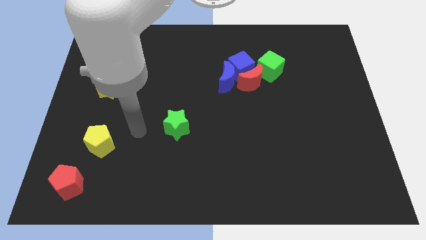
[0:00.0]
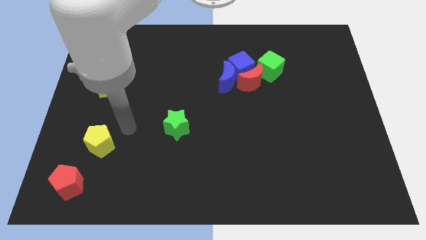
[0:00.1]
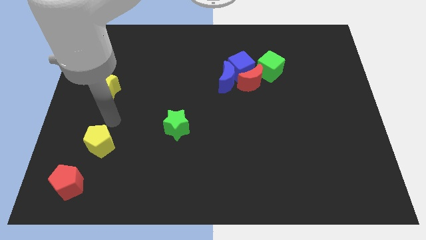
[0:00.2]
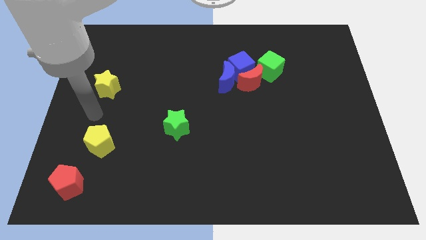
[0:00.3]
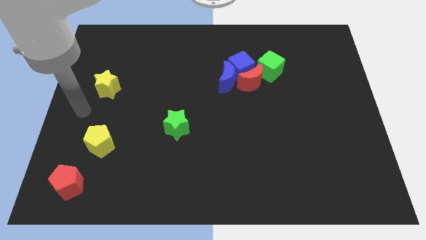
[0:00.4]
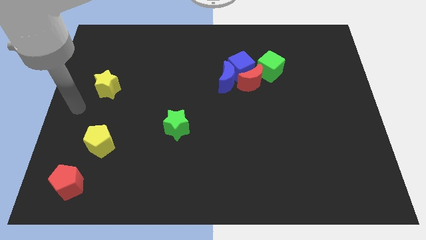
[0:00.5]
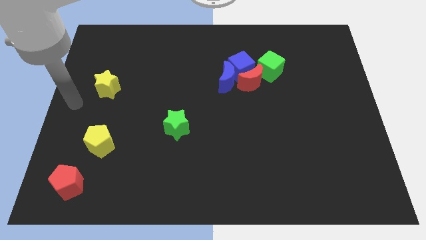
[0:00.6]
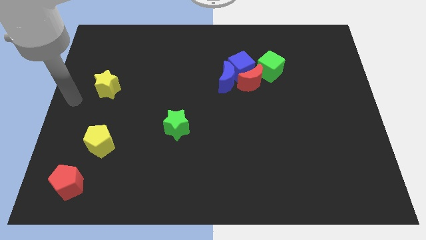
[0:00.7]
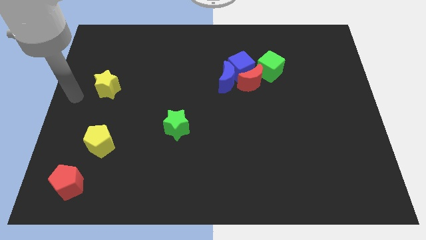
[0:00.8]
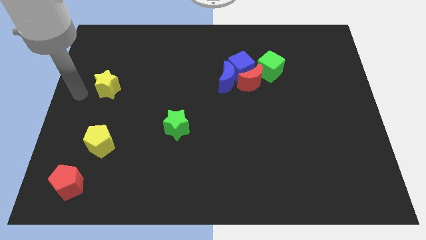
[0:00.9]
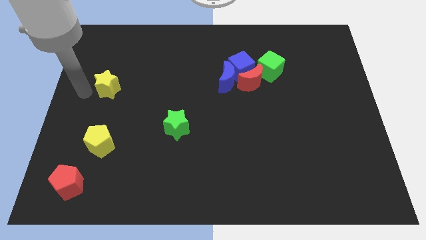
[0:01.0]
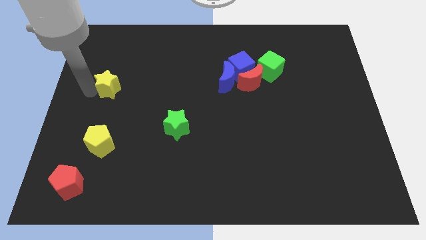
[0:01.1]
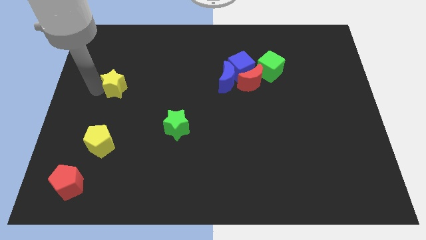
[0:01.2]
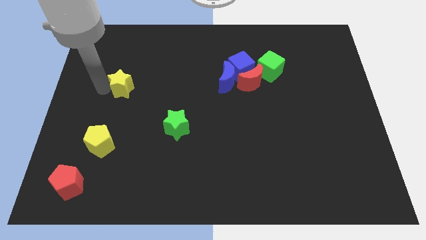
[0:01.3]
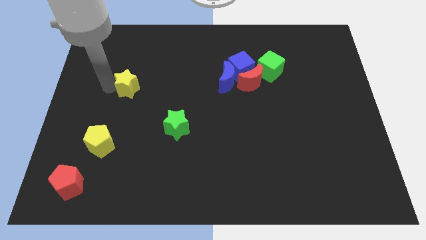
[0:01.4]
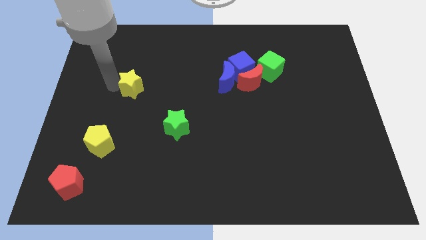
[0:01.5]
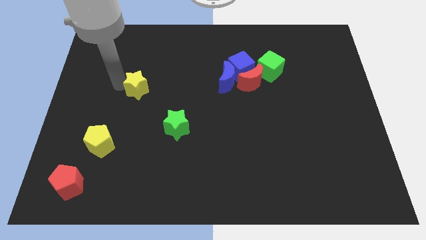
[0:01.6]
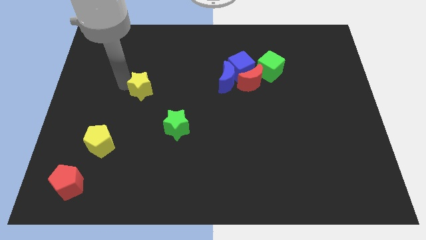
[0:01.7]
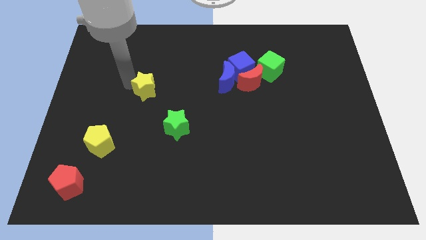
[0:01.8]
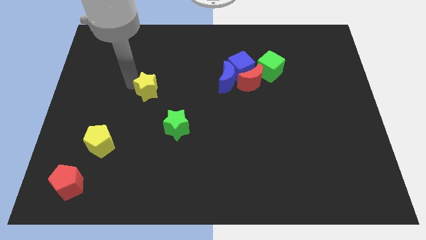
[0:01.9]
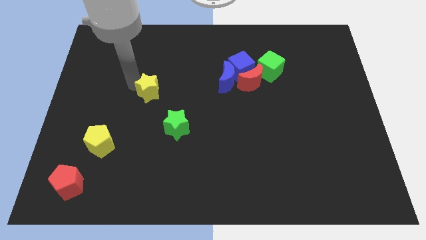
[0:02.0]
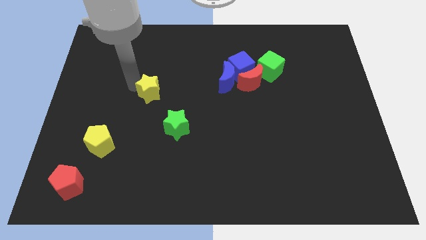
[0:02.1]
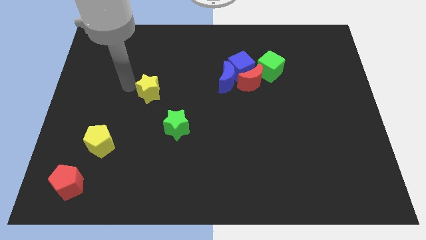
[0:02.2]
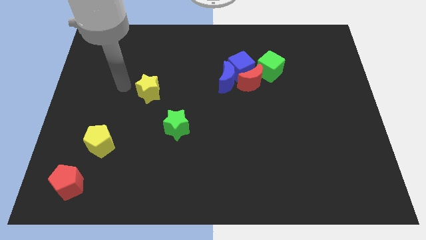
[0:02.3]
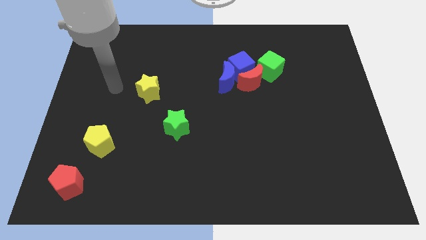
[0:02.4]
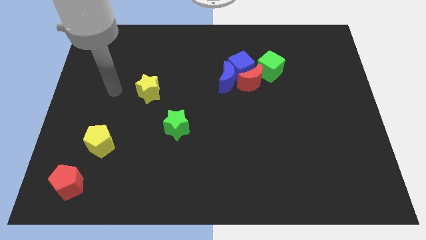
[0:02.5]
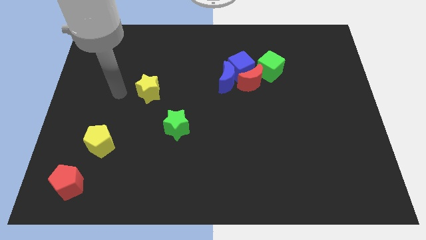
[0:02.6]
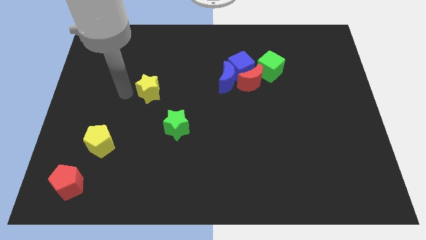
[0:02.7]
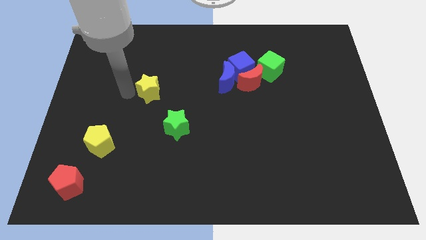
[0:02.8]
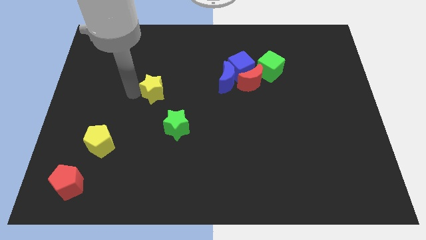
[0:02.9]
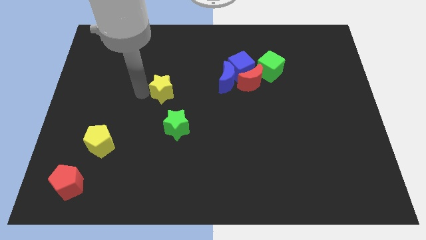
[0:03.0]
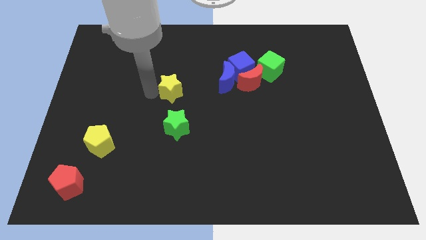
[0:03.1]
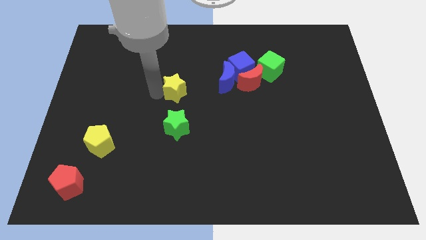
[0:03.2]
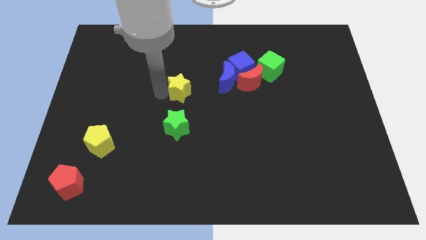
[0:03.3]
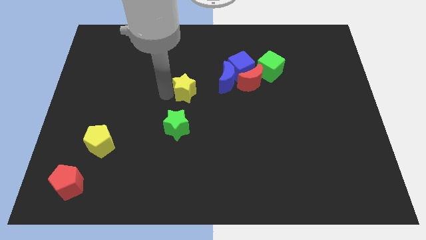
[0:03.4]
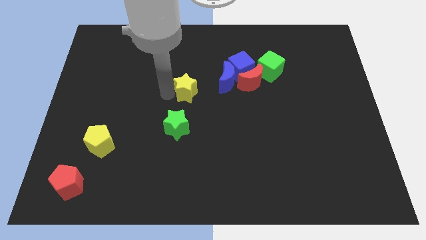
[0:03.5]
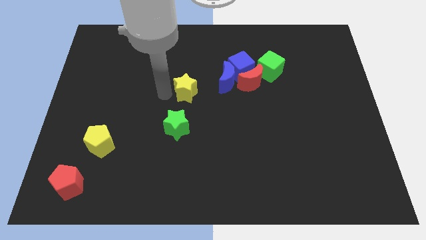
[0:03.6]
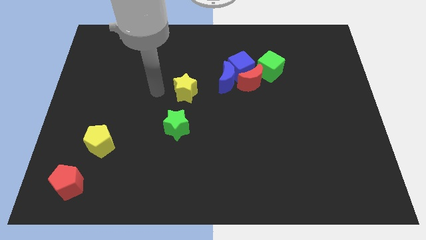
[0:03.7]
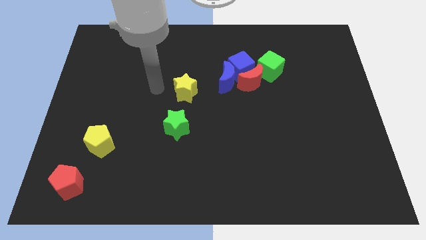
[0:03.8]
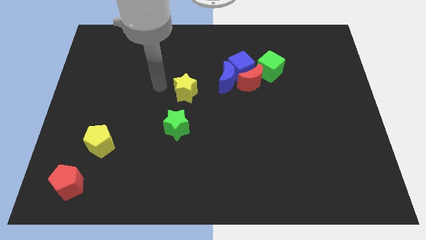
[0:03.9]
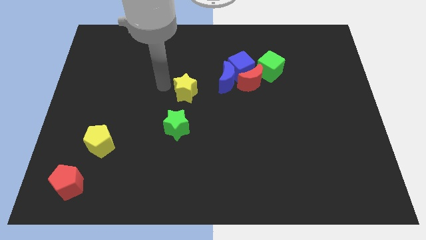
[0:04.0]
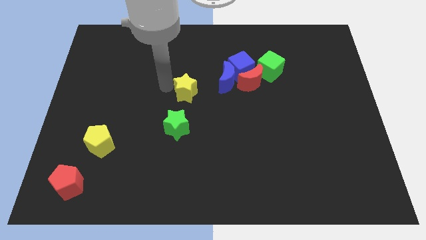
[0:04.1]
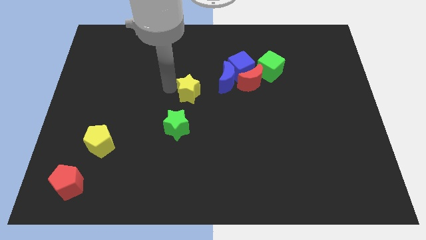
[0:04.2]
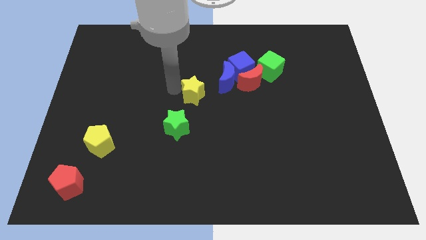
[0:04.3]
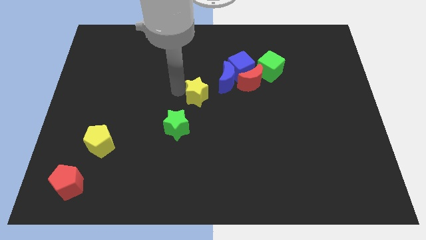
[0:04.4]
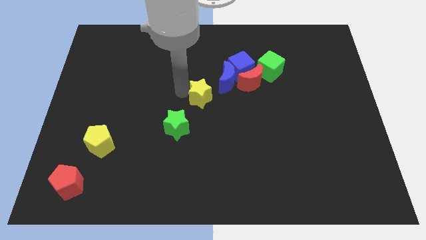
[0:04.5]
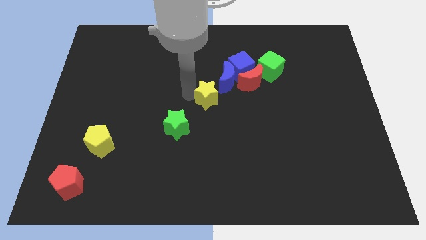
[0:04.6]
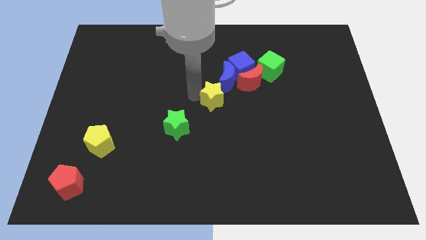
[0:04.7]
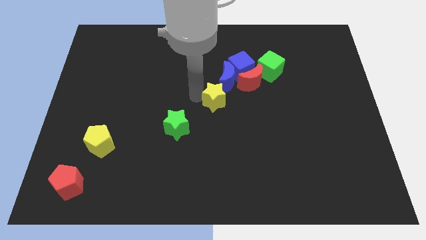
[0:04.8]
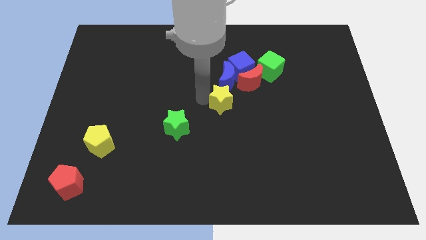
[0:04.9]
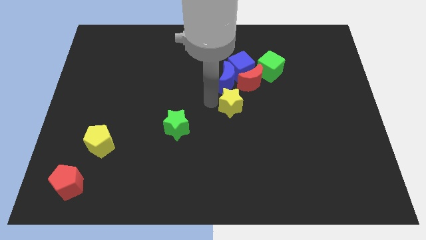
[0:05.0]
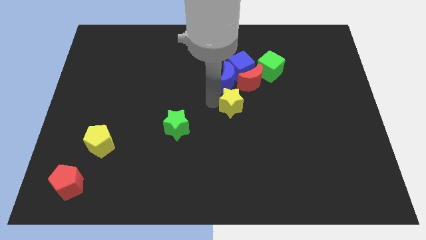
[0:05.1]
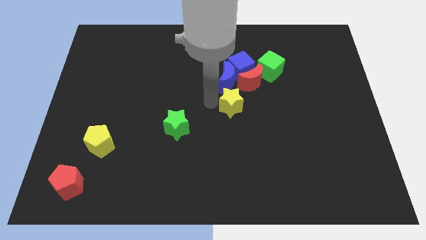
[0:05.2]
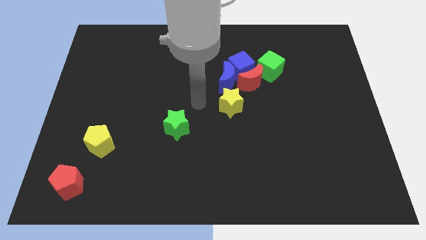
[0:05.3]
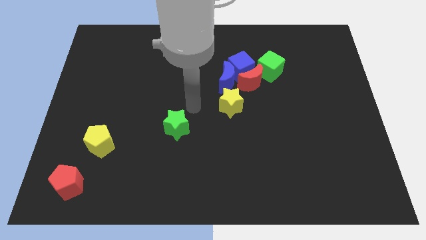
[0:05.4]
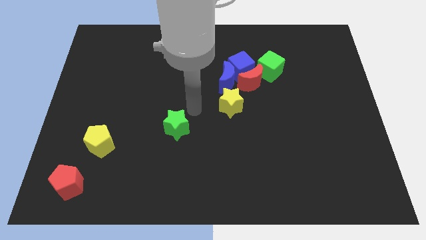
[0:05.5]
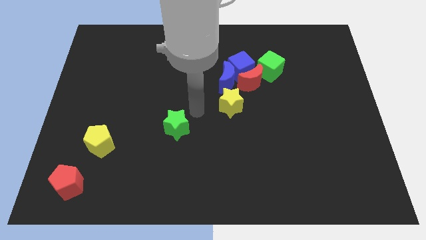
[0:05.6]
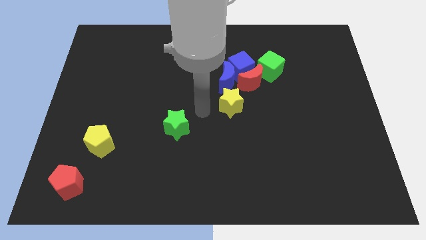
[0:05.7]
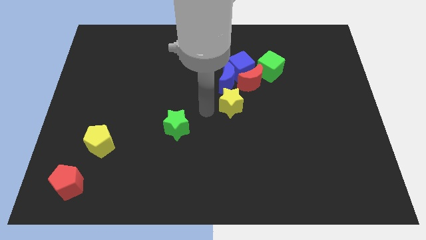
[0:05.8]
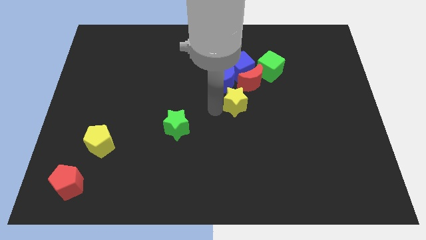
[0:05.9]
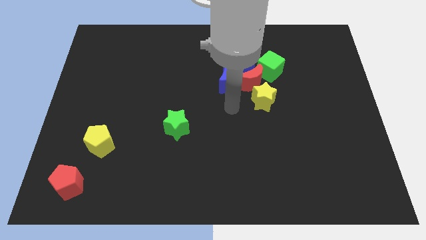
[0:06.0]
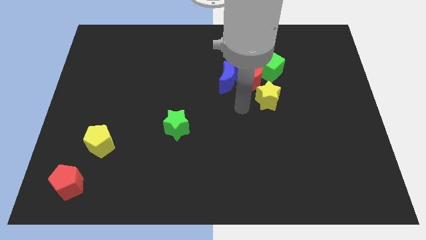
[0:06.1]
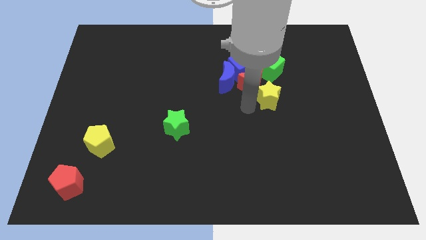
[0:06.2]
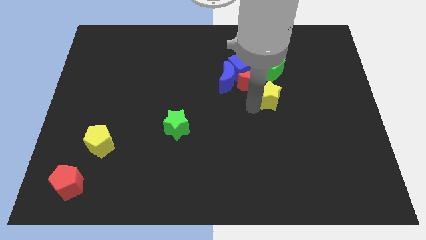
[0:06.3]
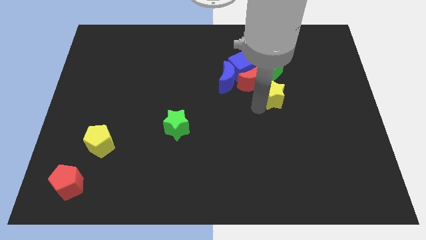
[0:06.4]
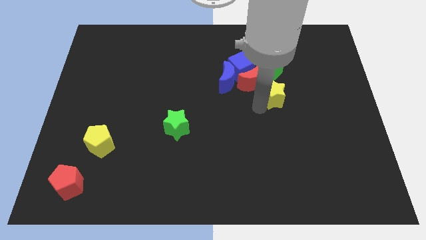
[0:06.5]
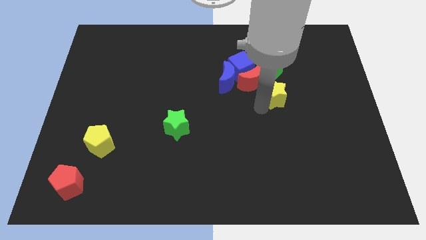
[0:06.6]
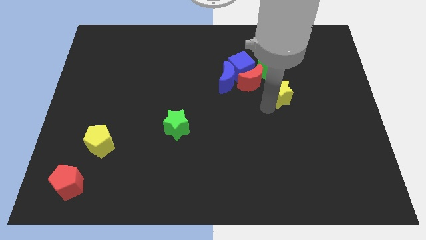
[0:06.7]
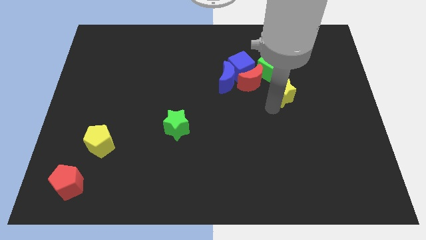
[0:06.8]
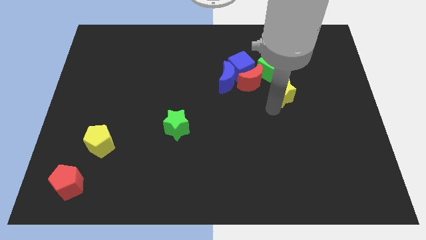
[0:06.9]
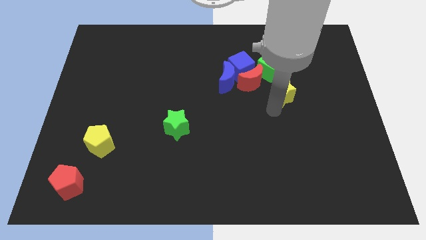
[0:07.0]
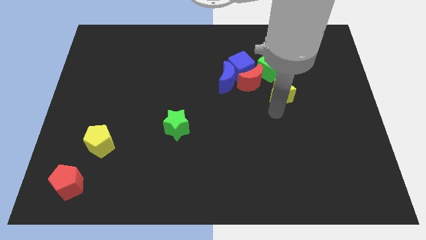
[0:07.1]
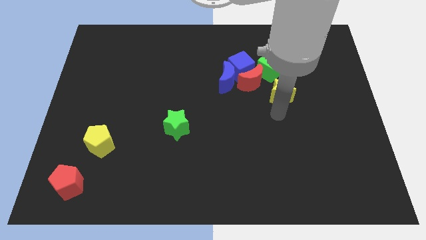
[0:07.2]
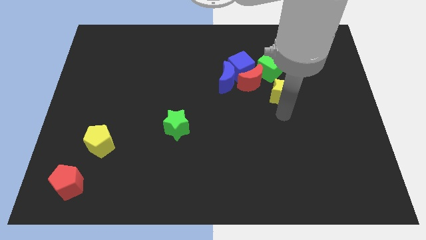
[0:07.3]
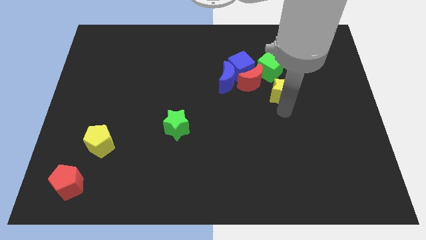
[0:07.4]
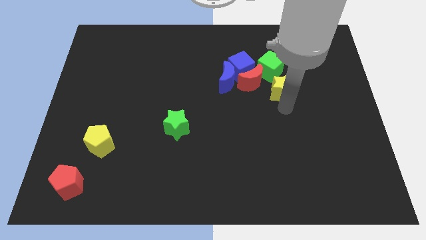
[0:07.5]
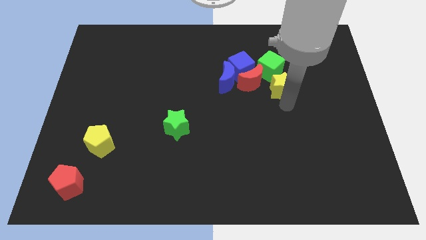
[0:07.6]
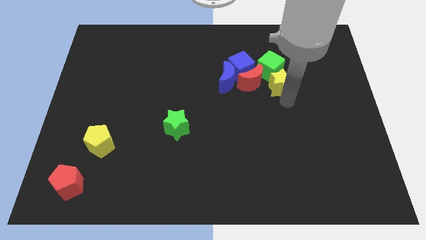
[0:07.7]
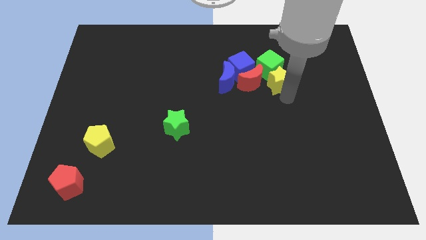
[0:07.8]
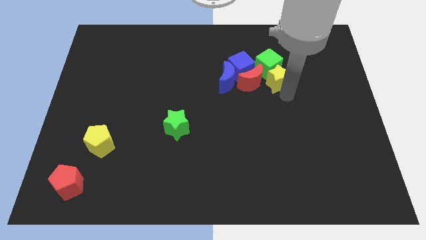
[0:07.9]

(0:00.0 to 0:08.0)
move the yellow star towards the green cube

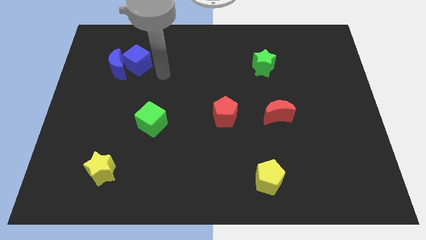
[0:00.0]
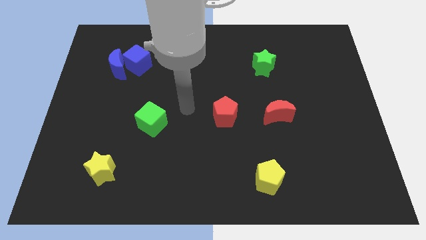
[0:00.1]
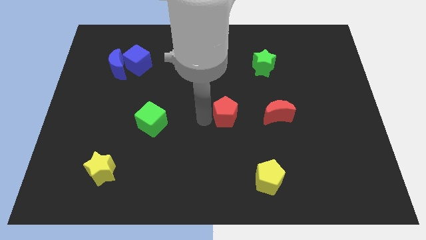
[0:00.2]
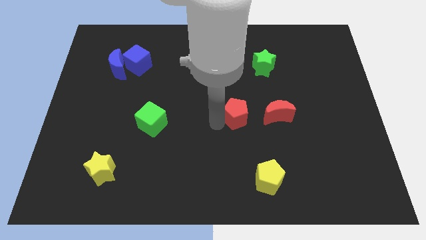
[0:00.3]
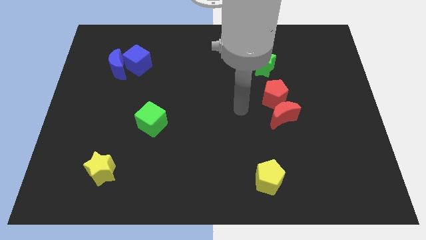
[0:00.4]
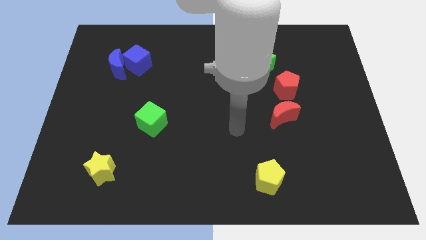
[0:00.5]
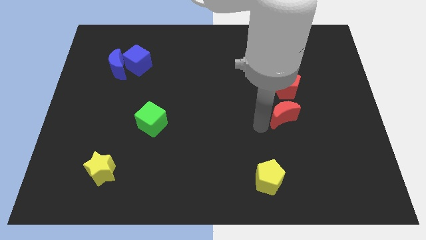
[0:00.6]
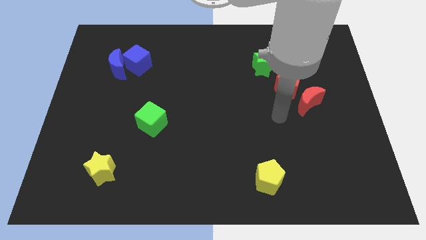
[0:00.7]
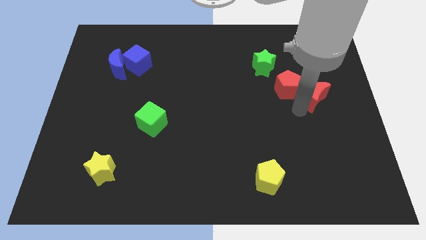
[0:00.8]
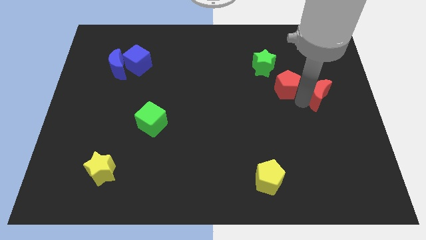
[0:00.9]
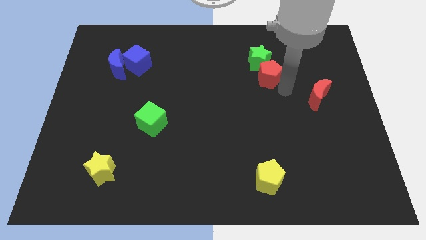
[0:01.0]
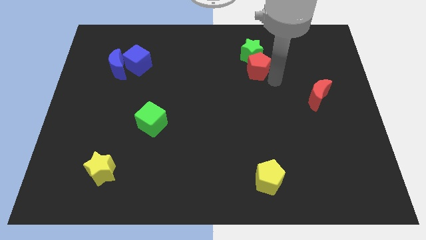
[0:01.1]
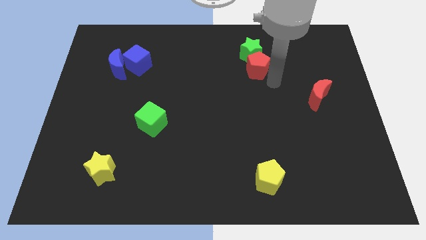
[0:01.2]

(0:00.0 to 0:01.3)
push the red pentagon close to the green star
